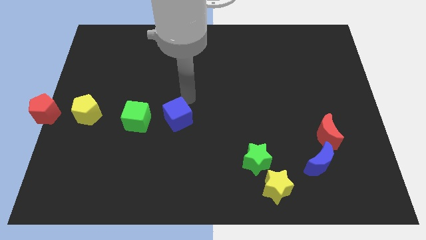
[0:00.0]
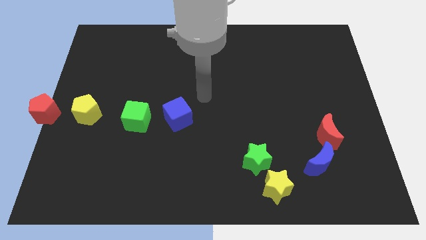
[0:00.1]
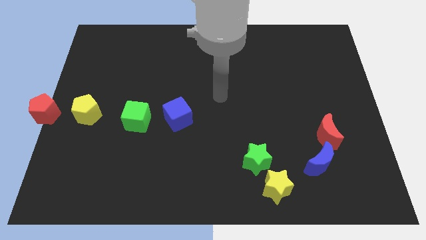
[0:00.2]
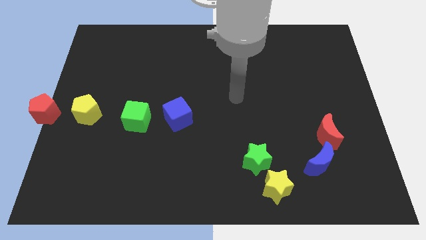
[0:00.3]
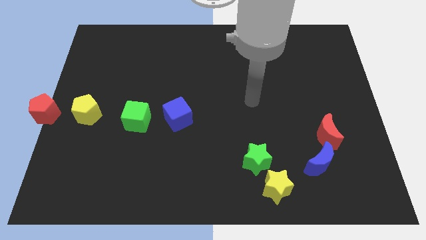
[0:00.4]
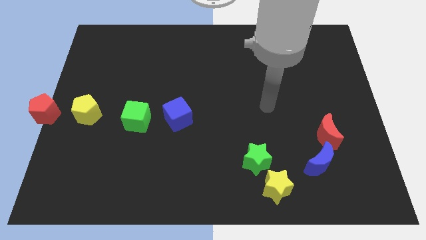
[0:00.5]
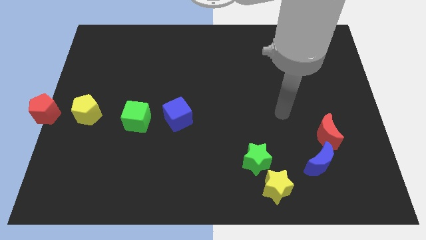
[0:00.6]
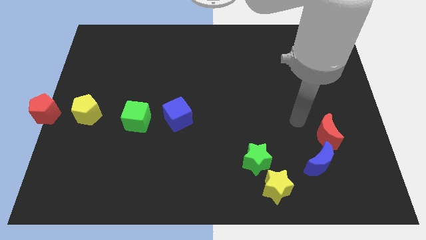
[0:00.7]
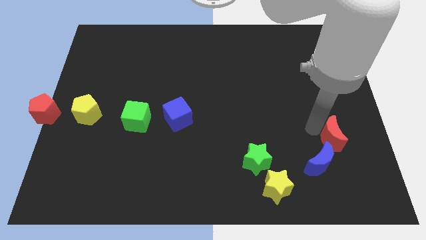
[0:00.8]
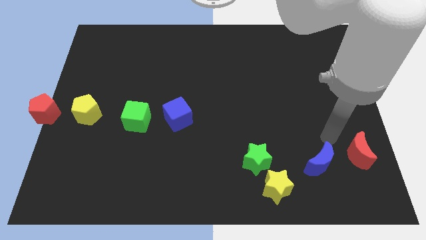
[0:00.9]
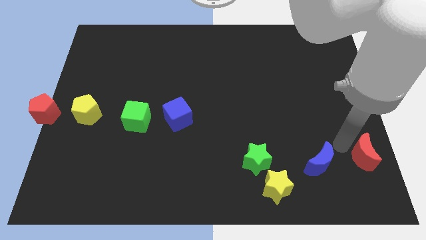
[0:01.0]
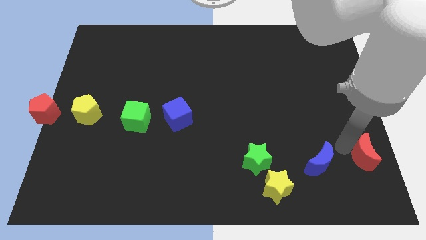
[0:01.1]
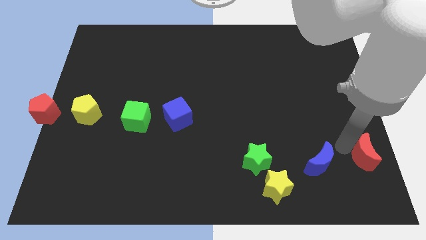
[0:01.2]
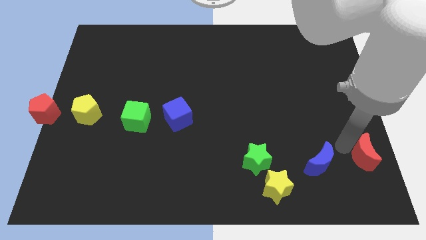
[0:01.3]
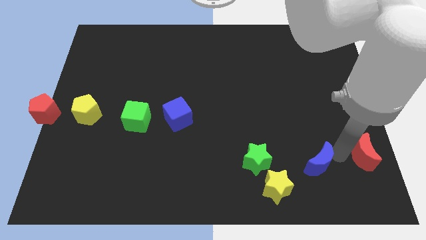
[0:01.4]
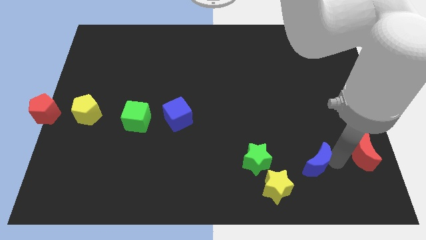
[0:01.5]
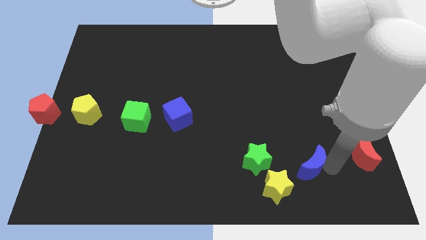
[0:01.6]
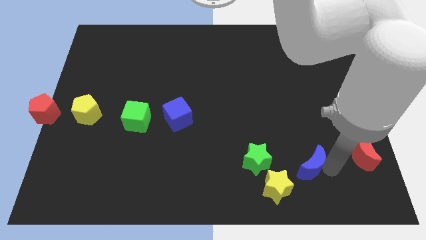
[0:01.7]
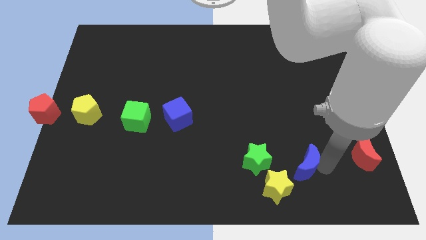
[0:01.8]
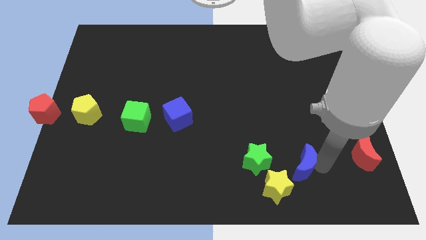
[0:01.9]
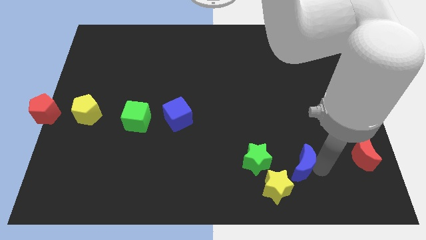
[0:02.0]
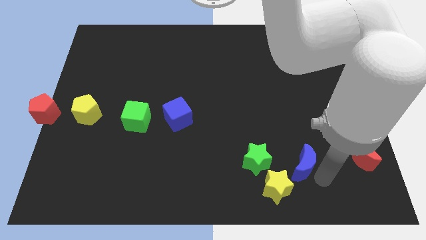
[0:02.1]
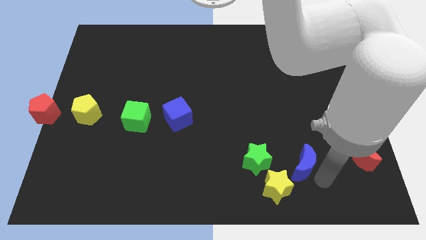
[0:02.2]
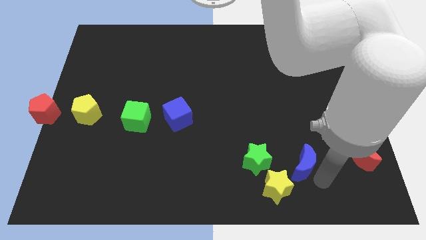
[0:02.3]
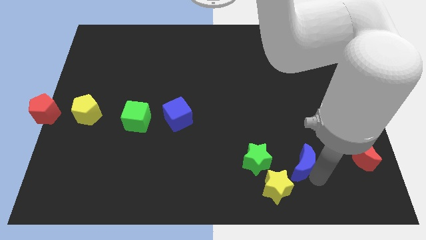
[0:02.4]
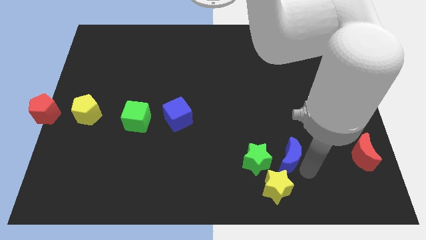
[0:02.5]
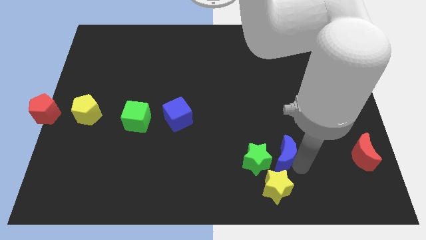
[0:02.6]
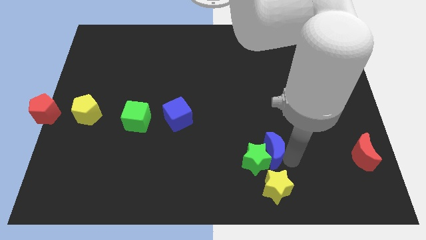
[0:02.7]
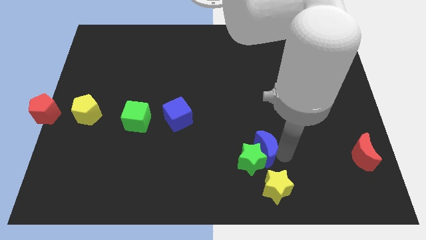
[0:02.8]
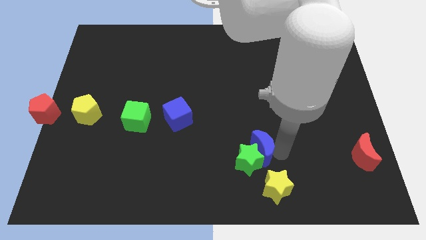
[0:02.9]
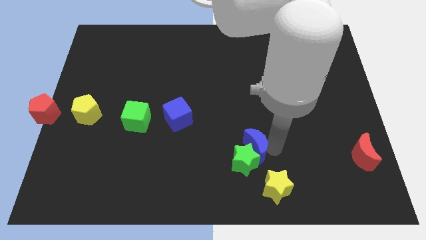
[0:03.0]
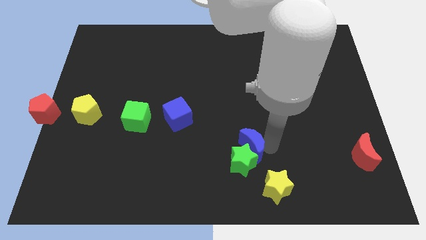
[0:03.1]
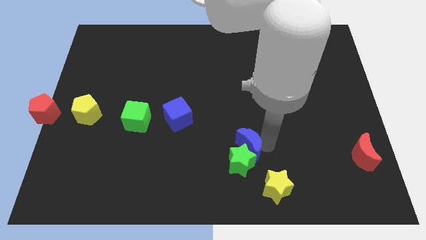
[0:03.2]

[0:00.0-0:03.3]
separate blue moon and the red moon

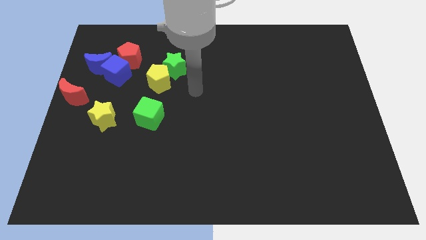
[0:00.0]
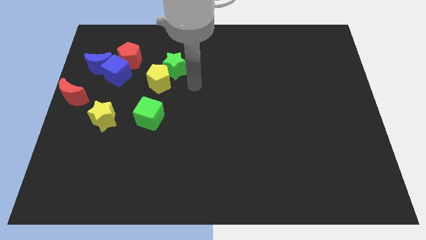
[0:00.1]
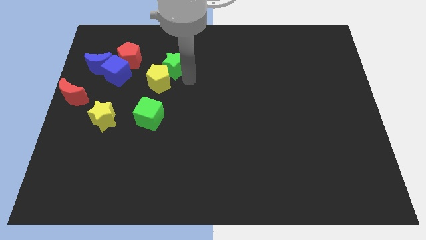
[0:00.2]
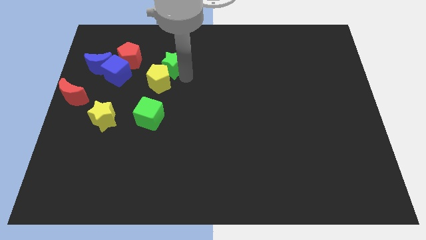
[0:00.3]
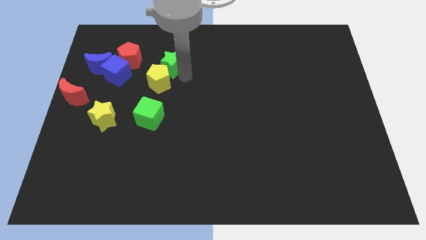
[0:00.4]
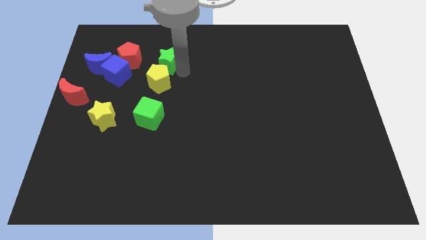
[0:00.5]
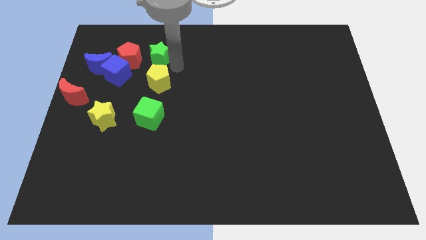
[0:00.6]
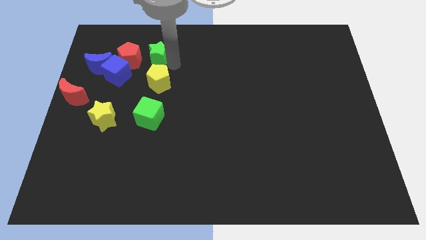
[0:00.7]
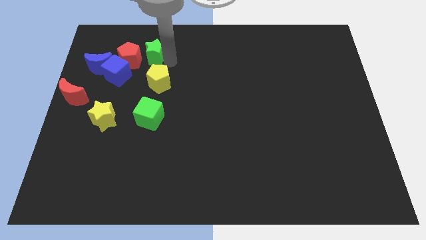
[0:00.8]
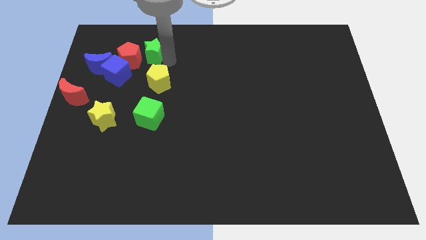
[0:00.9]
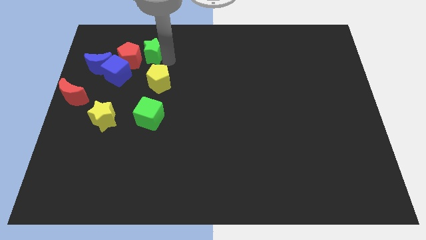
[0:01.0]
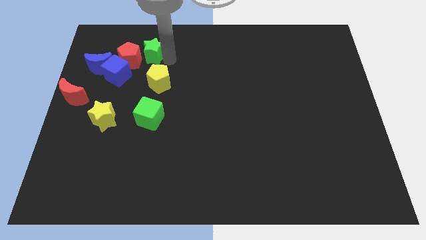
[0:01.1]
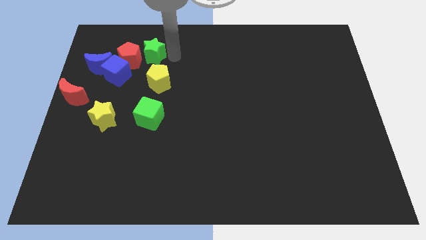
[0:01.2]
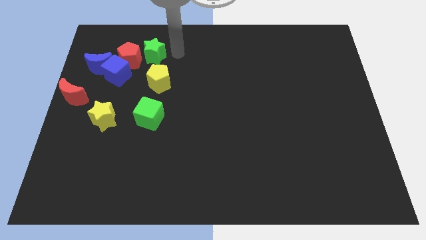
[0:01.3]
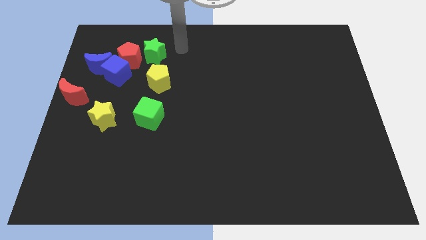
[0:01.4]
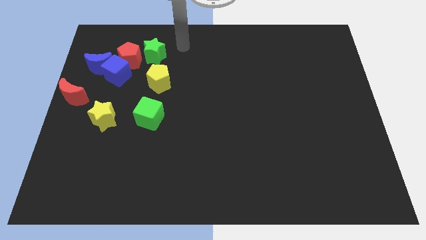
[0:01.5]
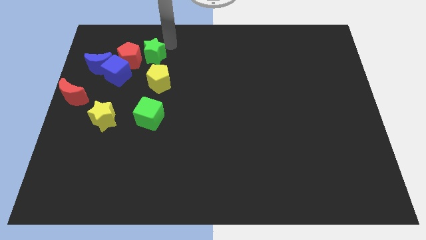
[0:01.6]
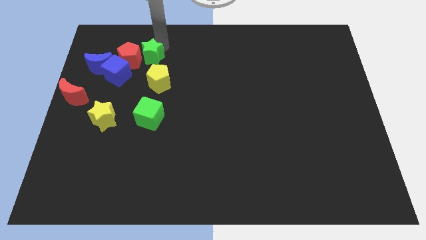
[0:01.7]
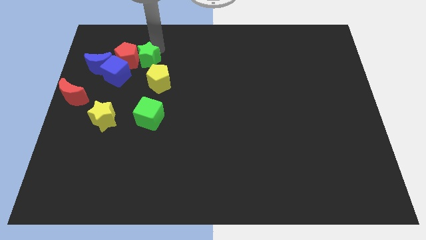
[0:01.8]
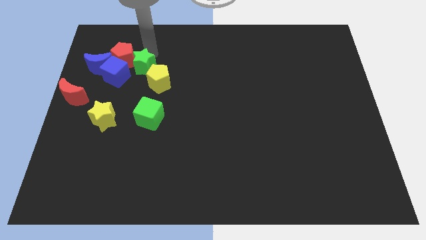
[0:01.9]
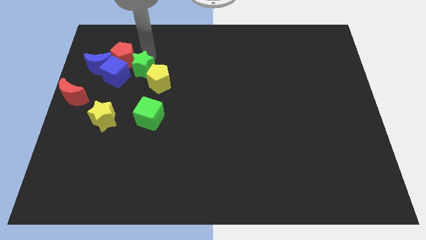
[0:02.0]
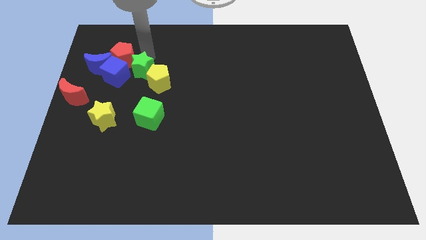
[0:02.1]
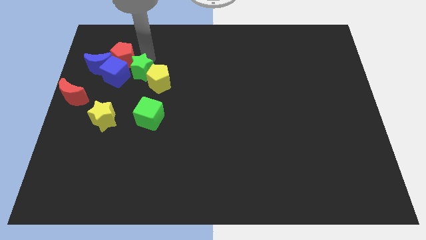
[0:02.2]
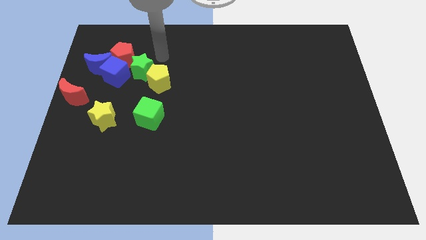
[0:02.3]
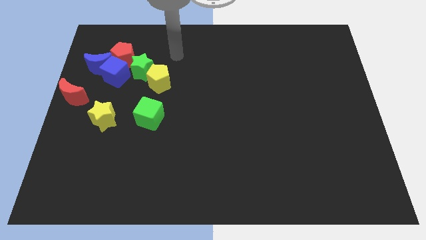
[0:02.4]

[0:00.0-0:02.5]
push the green star into the red pentagon

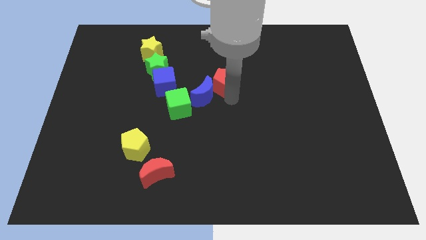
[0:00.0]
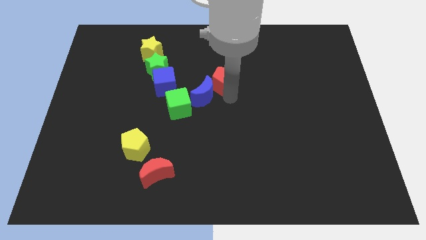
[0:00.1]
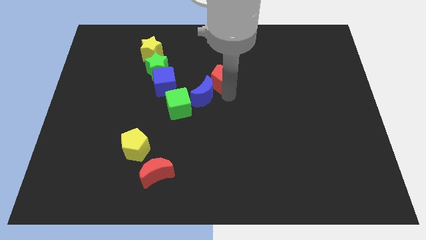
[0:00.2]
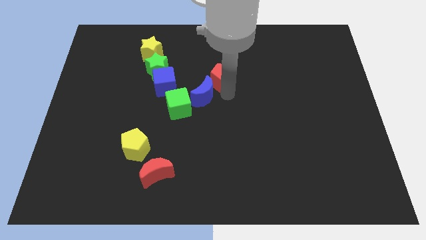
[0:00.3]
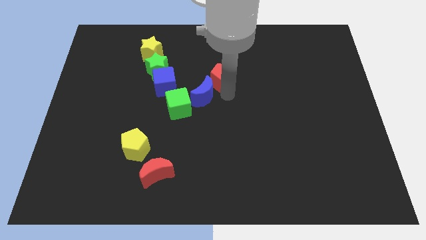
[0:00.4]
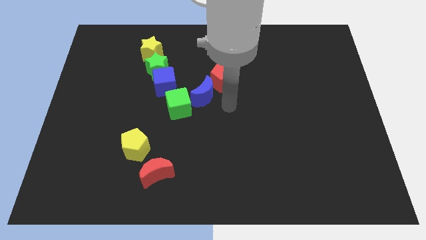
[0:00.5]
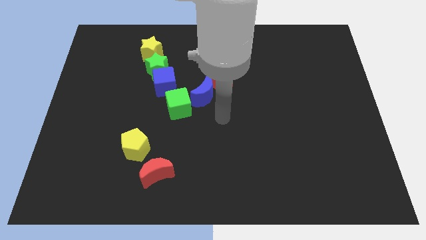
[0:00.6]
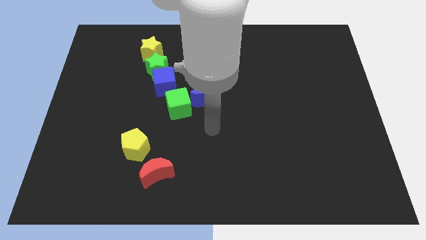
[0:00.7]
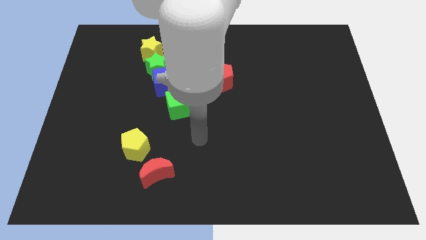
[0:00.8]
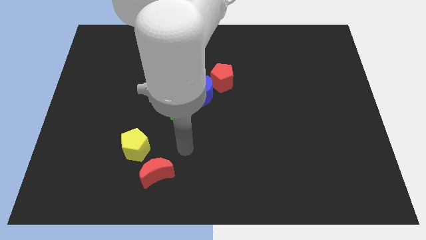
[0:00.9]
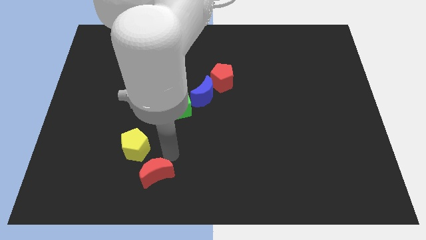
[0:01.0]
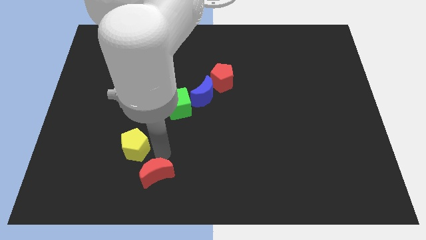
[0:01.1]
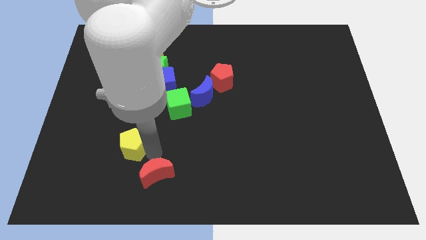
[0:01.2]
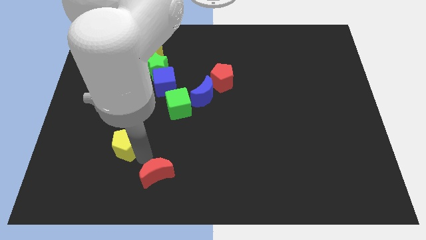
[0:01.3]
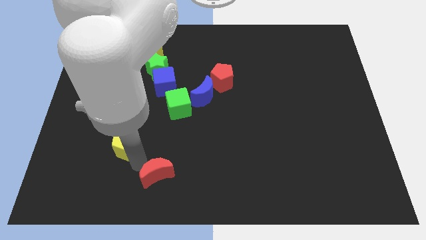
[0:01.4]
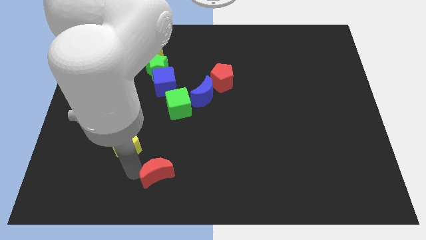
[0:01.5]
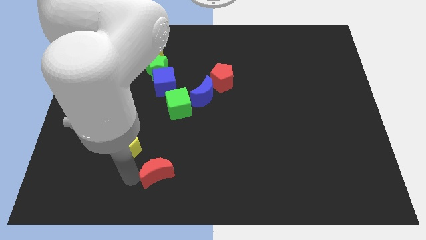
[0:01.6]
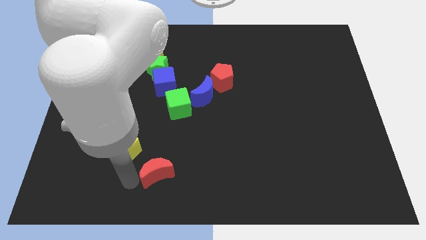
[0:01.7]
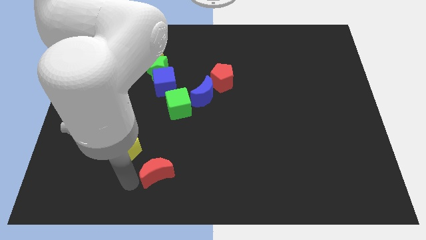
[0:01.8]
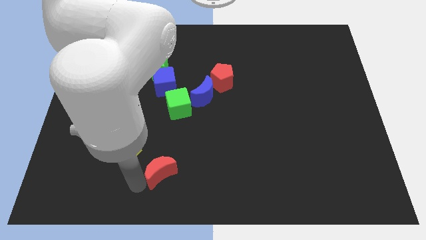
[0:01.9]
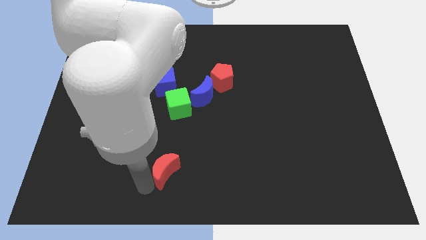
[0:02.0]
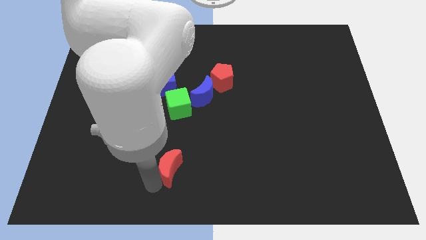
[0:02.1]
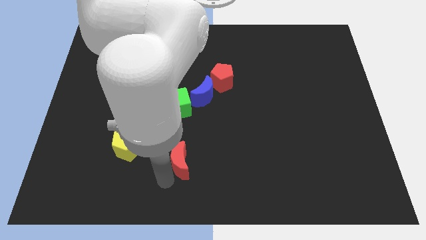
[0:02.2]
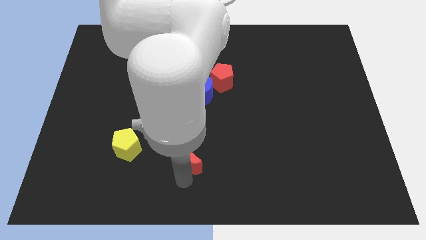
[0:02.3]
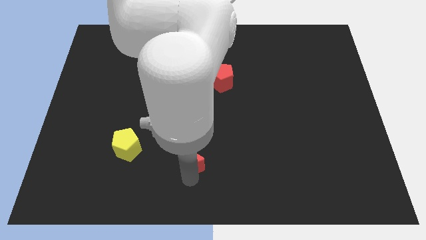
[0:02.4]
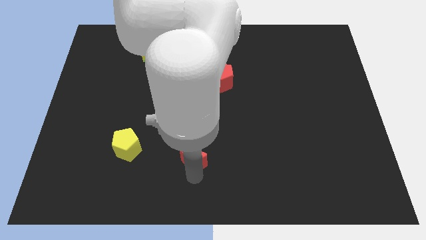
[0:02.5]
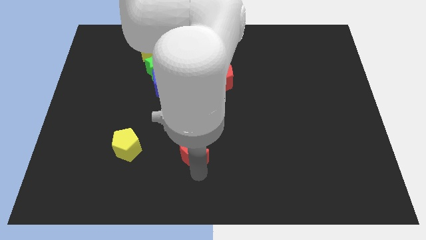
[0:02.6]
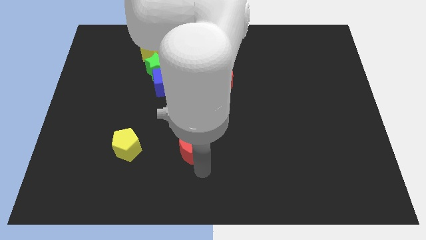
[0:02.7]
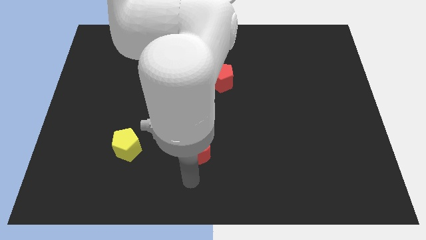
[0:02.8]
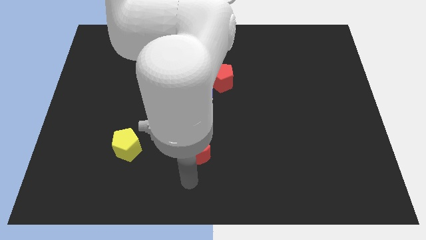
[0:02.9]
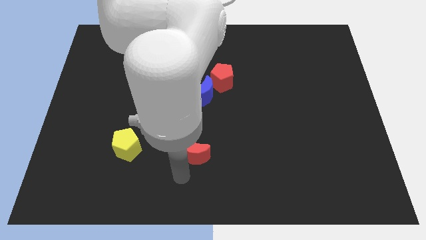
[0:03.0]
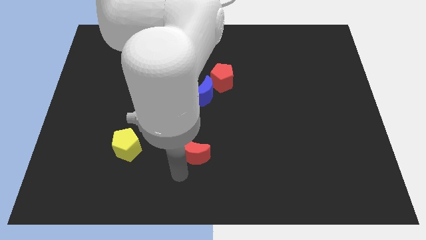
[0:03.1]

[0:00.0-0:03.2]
slightly touch right to the yellow pentagon
